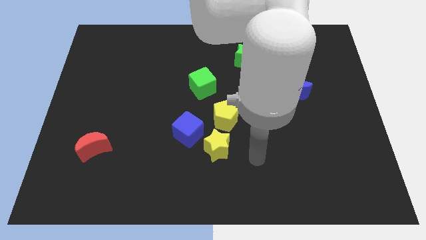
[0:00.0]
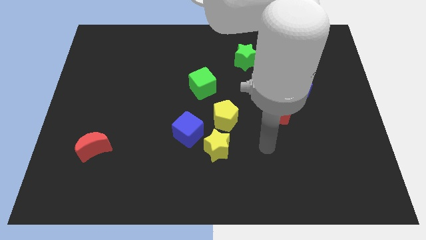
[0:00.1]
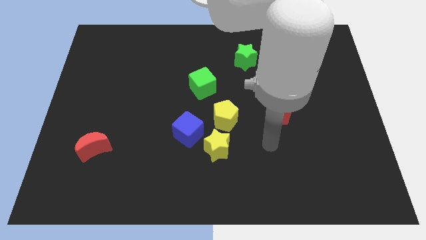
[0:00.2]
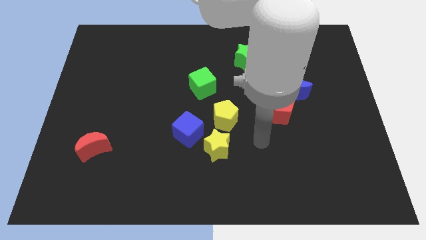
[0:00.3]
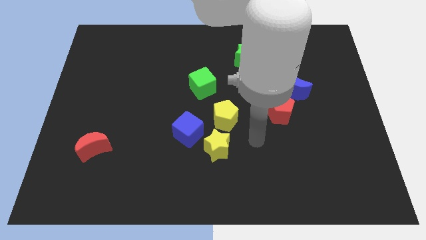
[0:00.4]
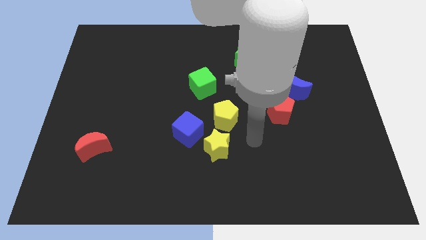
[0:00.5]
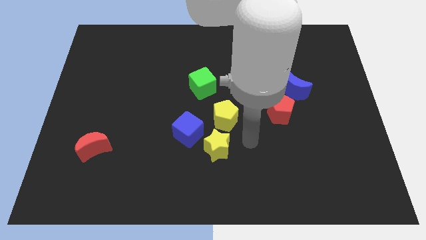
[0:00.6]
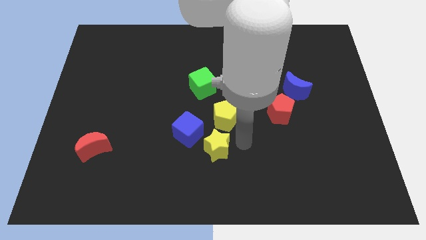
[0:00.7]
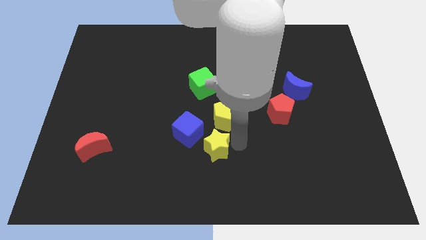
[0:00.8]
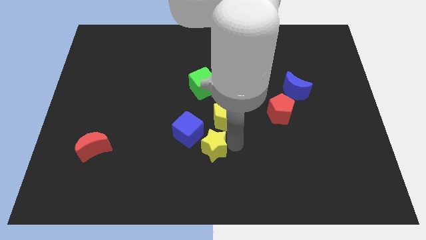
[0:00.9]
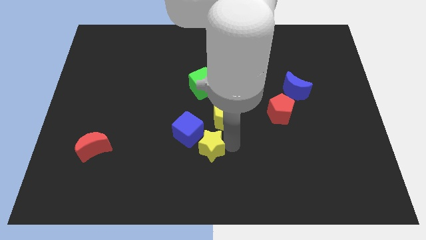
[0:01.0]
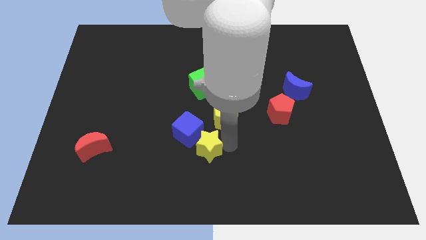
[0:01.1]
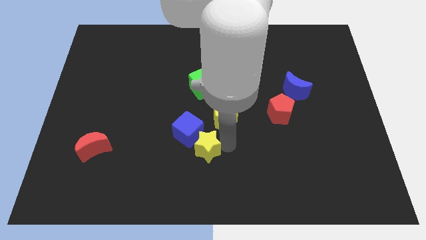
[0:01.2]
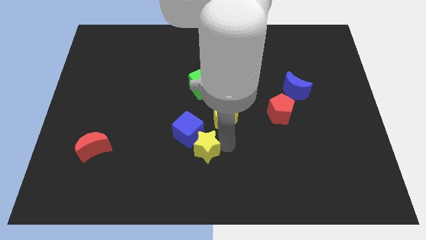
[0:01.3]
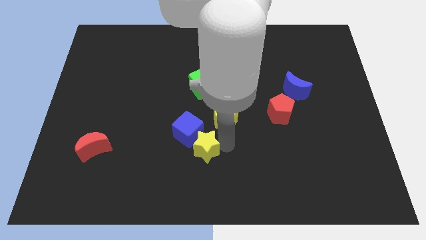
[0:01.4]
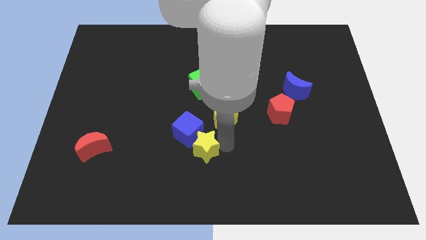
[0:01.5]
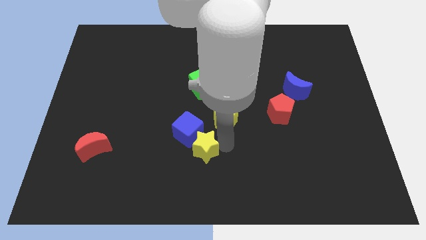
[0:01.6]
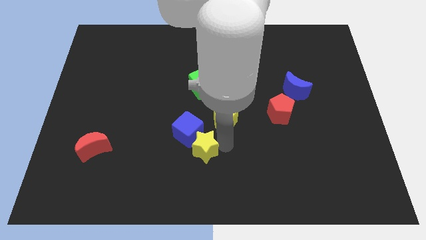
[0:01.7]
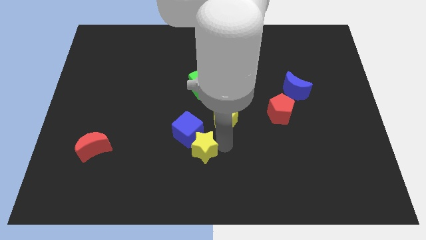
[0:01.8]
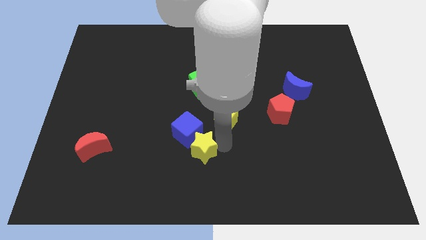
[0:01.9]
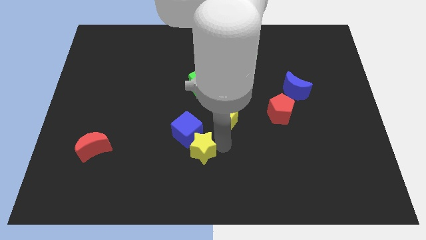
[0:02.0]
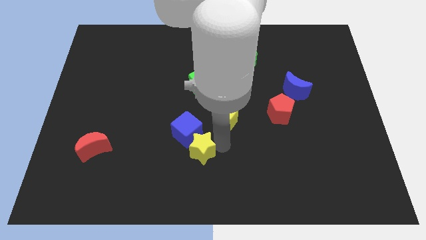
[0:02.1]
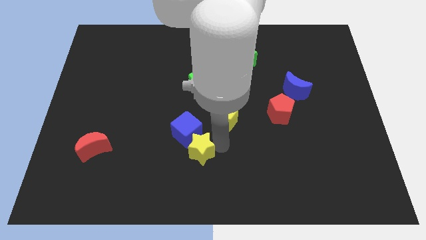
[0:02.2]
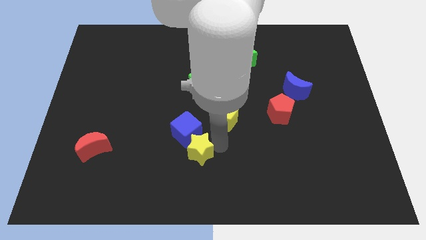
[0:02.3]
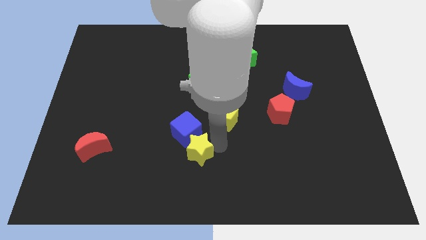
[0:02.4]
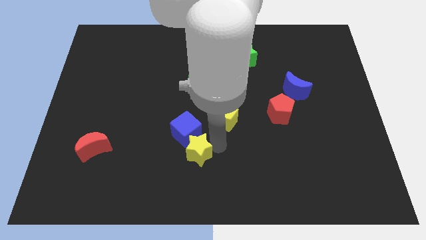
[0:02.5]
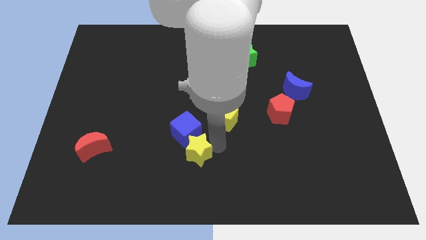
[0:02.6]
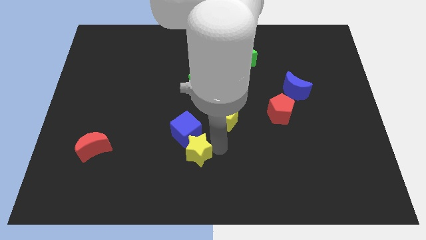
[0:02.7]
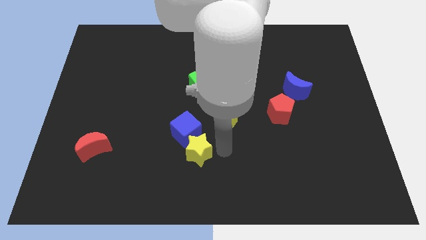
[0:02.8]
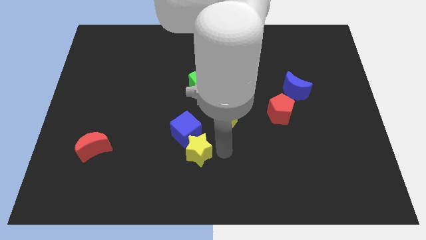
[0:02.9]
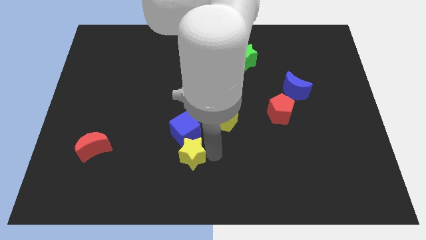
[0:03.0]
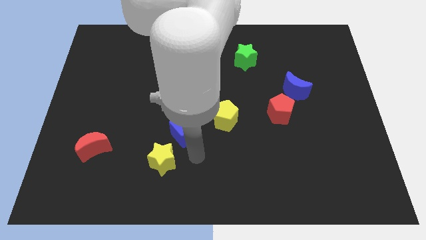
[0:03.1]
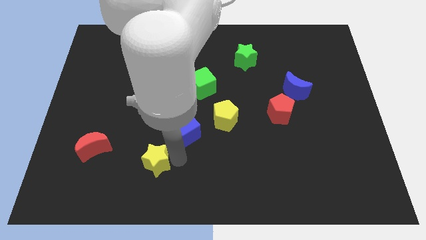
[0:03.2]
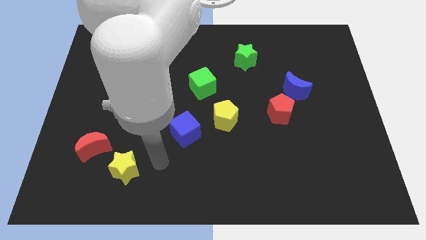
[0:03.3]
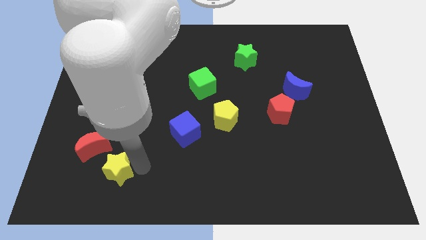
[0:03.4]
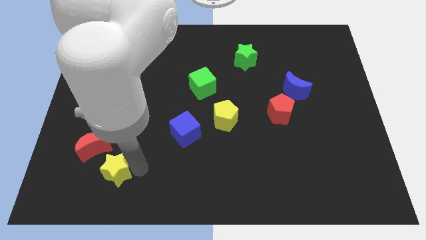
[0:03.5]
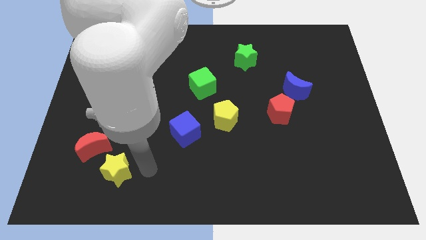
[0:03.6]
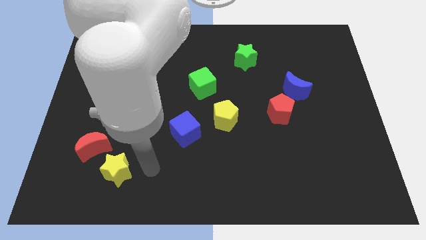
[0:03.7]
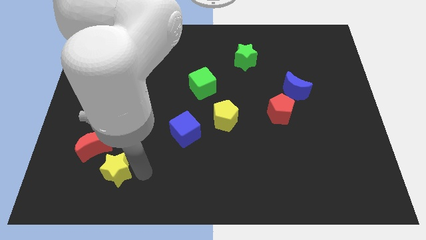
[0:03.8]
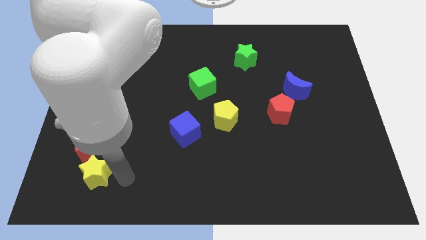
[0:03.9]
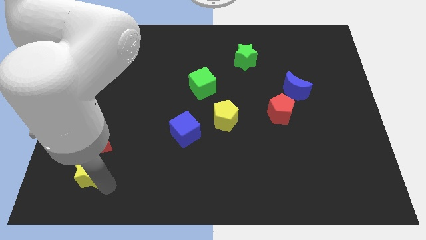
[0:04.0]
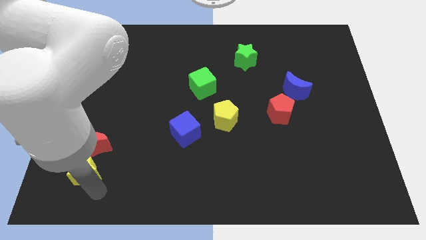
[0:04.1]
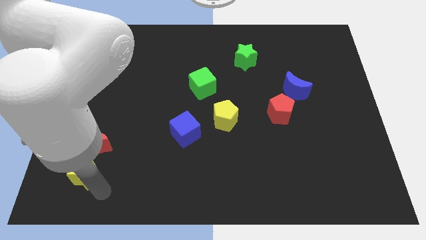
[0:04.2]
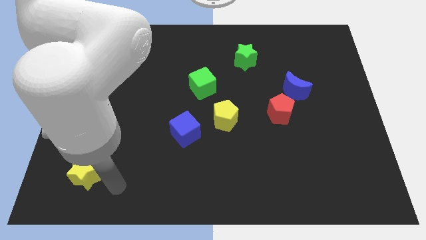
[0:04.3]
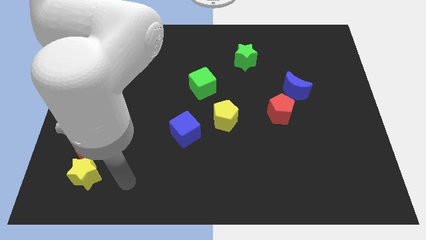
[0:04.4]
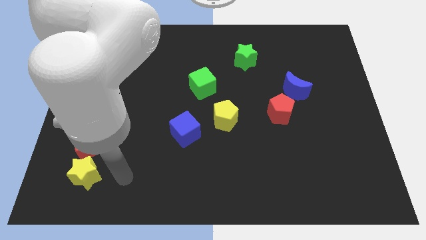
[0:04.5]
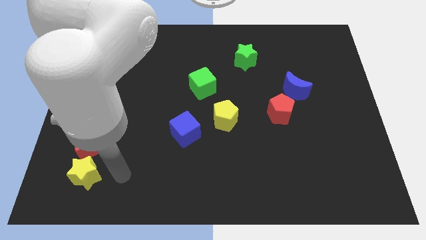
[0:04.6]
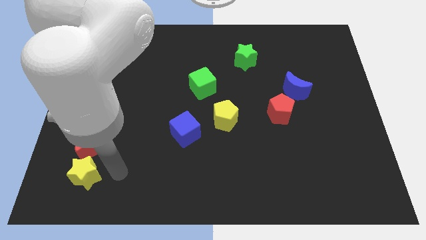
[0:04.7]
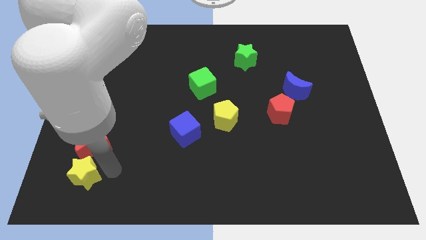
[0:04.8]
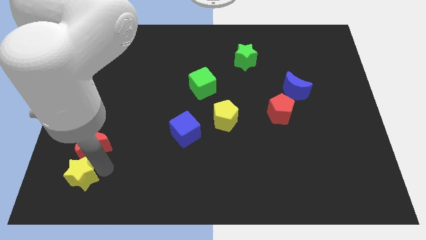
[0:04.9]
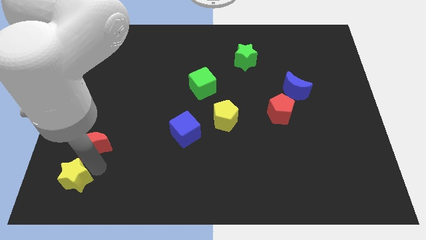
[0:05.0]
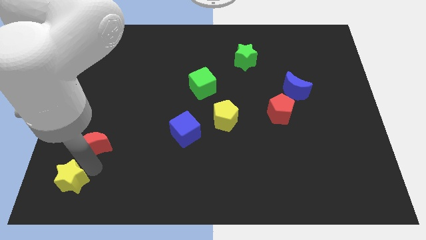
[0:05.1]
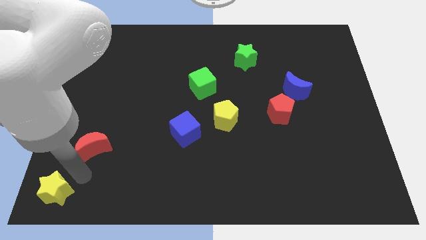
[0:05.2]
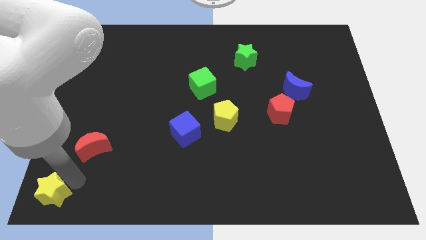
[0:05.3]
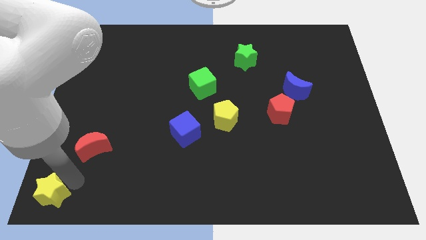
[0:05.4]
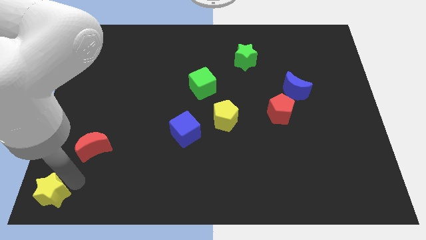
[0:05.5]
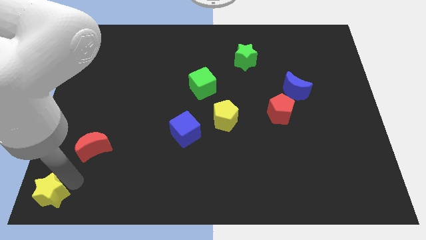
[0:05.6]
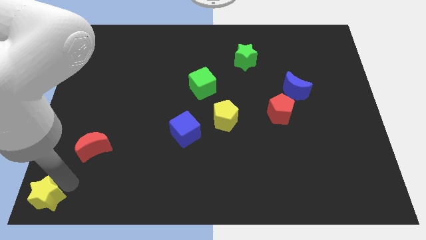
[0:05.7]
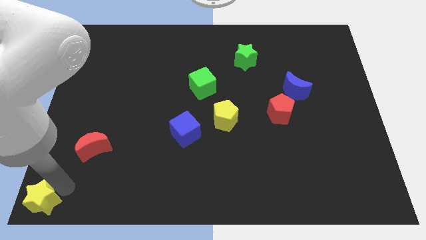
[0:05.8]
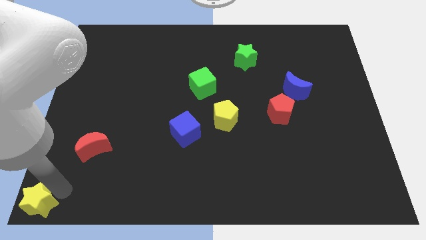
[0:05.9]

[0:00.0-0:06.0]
place the yellow star to the left bottom of the board

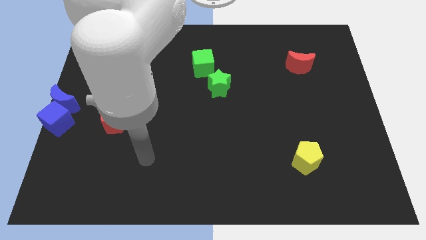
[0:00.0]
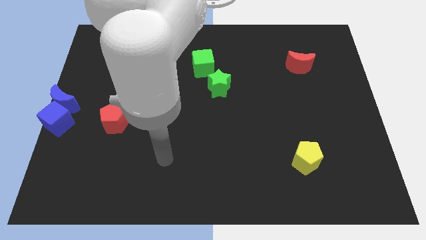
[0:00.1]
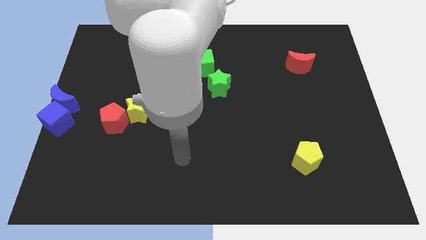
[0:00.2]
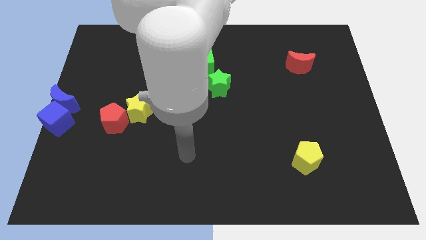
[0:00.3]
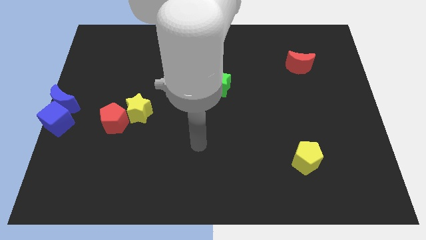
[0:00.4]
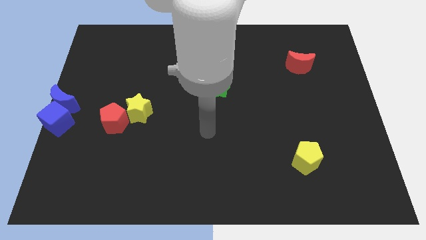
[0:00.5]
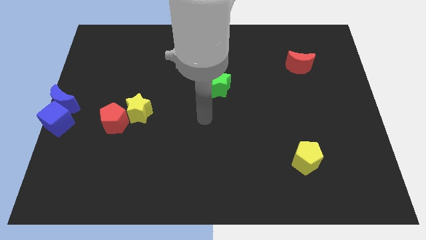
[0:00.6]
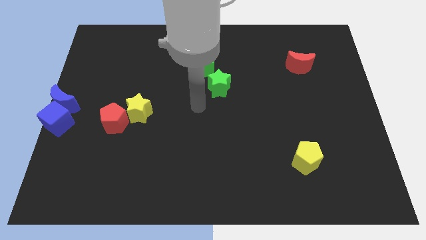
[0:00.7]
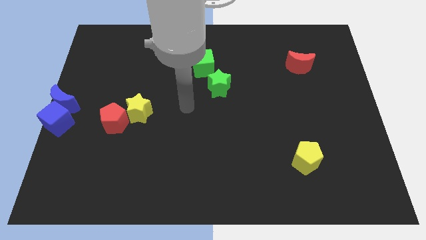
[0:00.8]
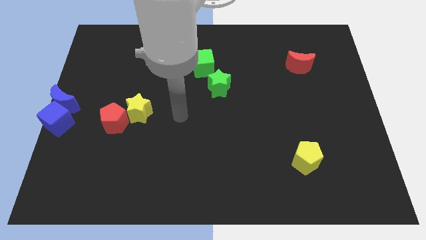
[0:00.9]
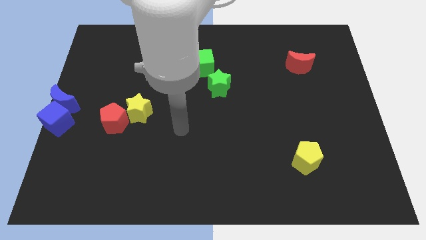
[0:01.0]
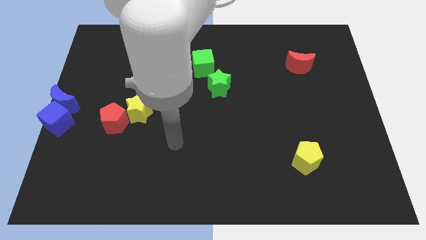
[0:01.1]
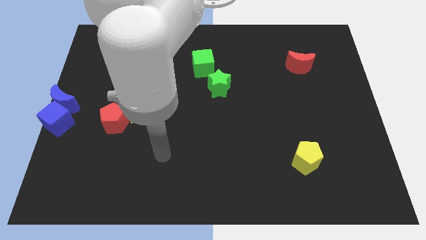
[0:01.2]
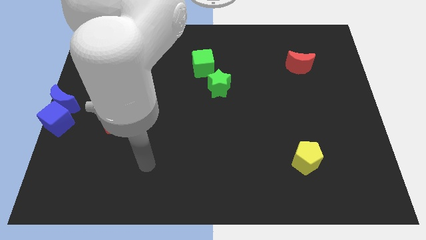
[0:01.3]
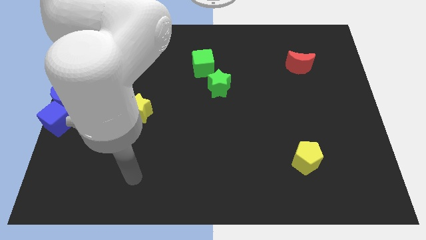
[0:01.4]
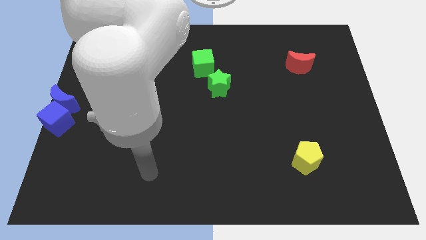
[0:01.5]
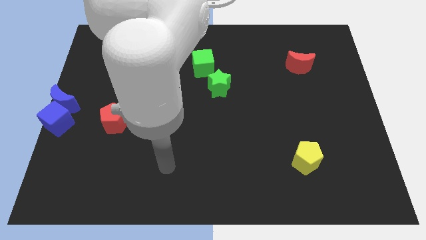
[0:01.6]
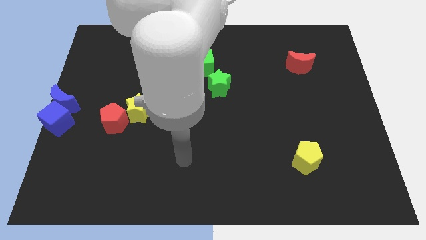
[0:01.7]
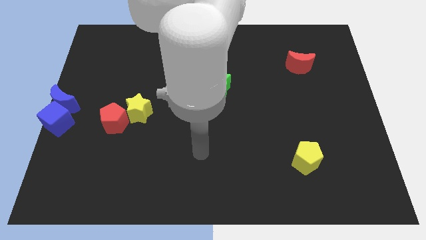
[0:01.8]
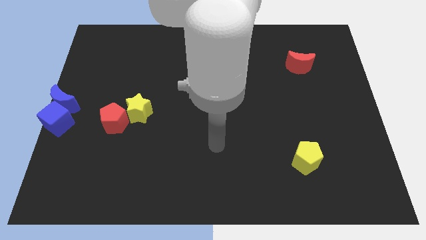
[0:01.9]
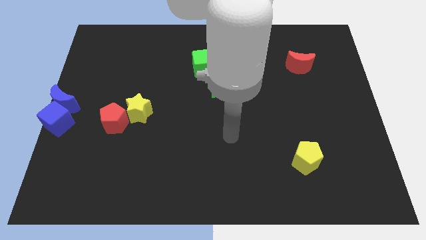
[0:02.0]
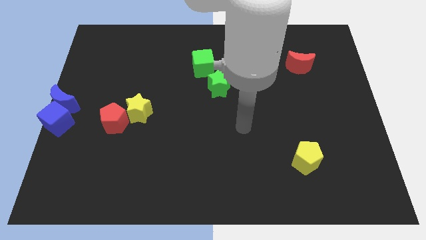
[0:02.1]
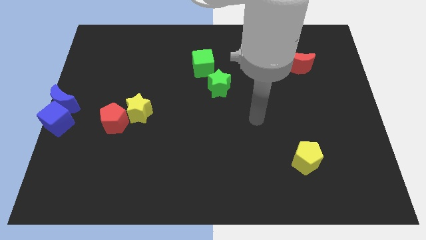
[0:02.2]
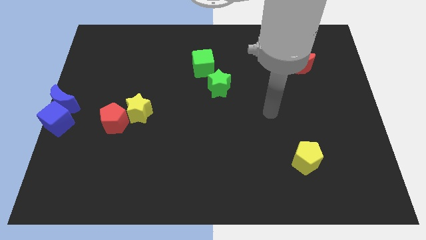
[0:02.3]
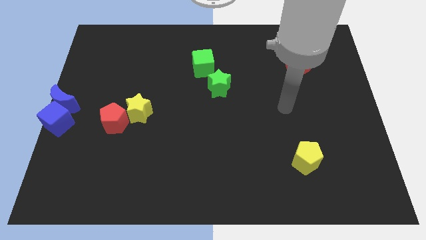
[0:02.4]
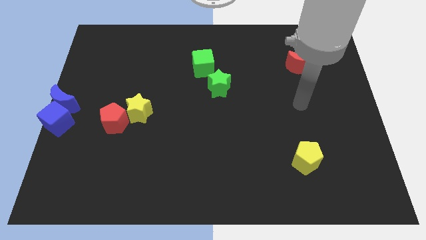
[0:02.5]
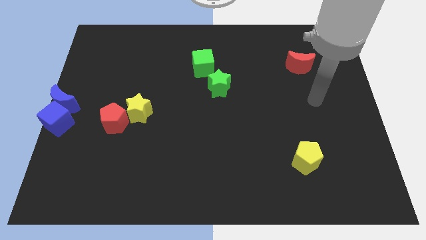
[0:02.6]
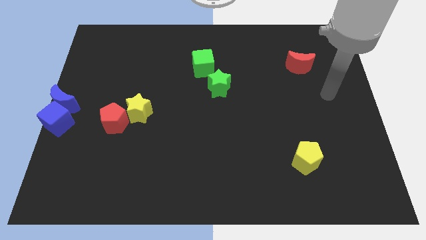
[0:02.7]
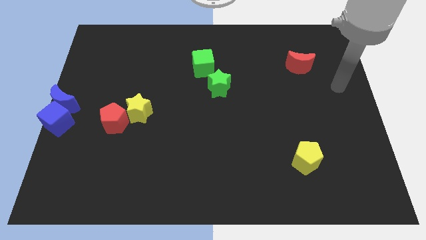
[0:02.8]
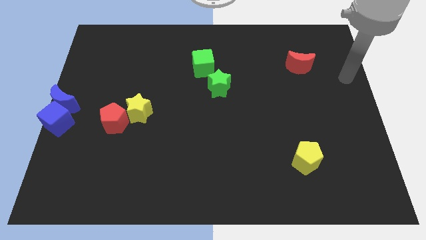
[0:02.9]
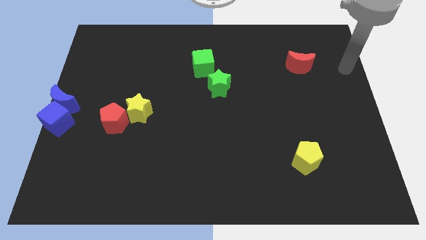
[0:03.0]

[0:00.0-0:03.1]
point your arm to the right of the red moon

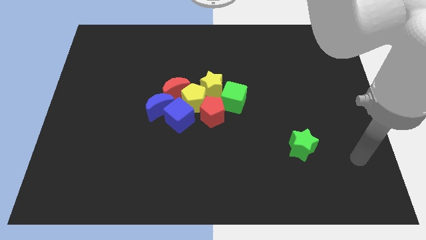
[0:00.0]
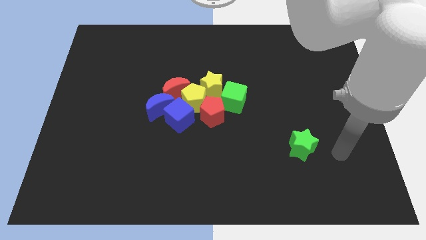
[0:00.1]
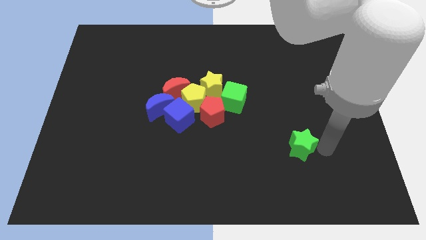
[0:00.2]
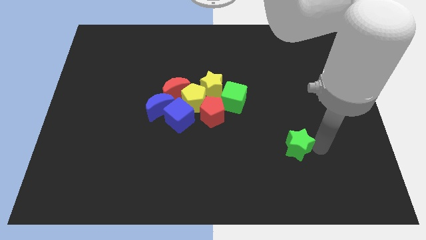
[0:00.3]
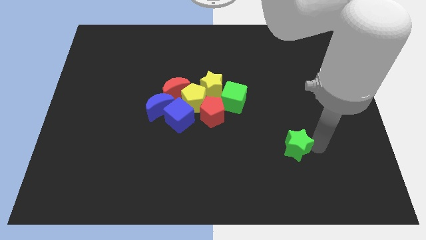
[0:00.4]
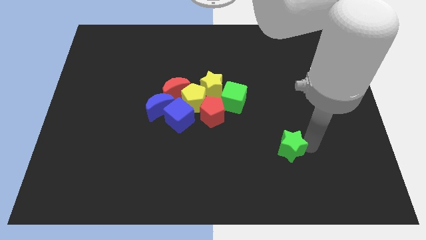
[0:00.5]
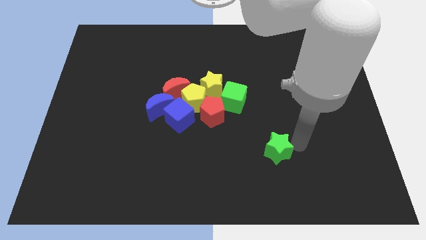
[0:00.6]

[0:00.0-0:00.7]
slightly push the green star towards left side
